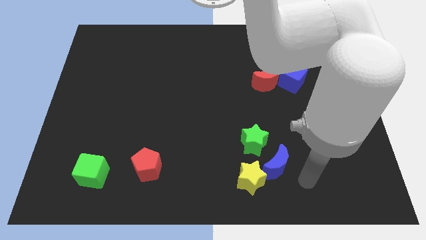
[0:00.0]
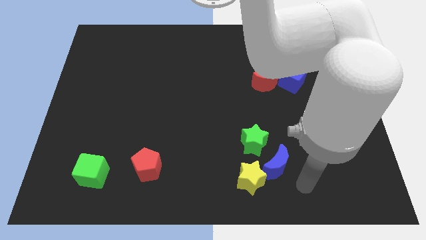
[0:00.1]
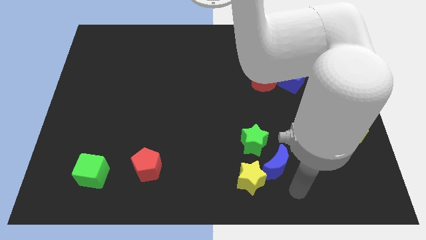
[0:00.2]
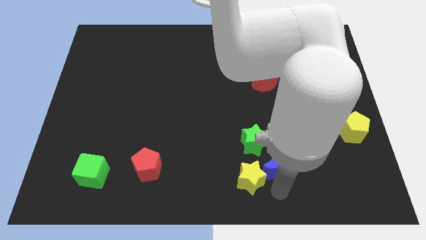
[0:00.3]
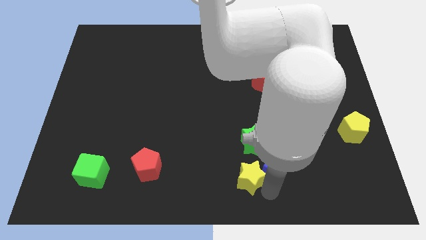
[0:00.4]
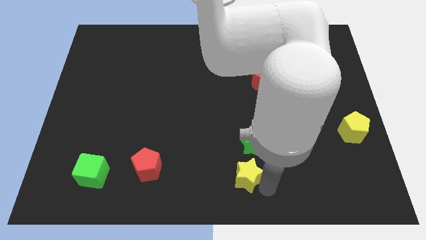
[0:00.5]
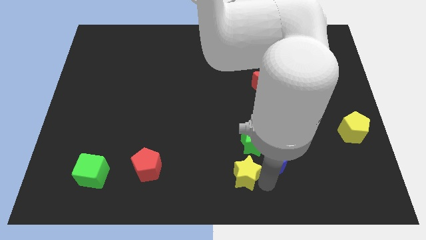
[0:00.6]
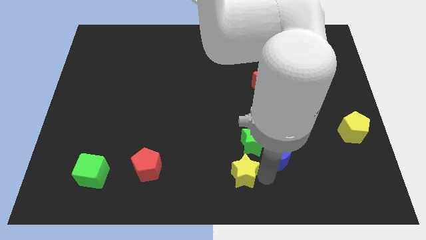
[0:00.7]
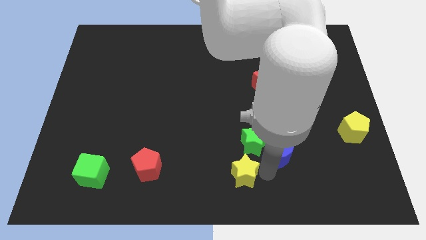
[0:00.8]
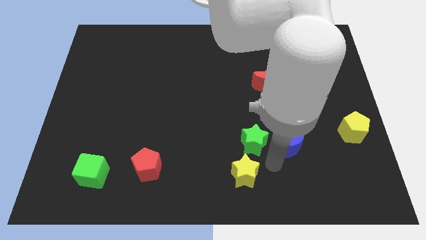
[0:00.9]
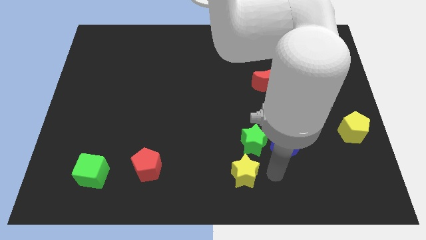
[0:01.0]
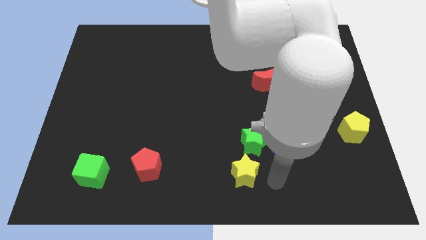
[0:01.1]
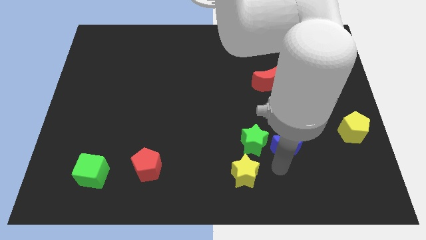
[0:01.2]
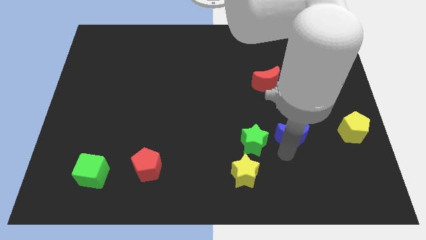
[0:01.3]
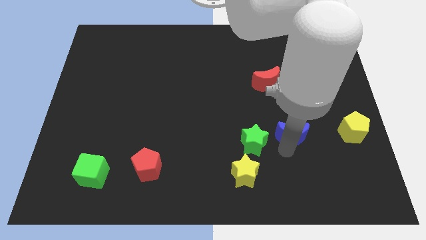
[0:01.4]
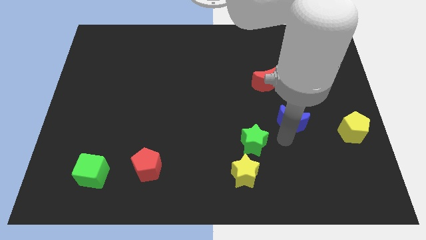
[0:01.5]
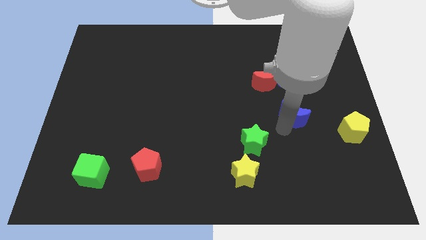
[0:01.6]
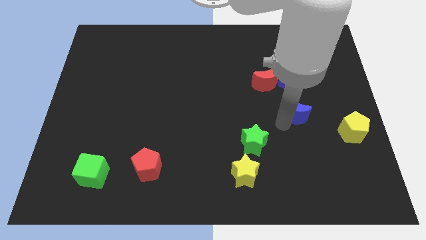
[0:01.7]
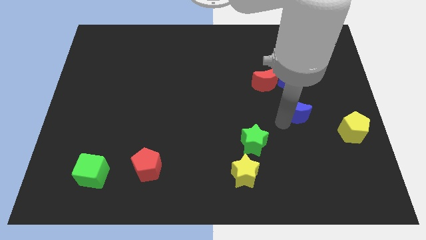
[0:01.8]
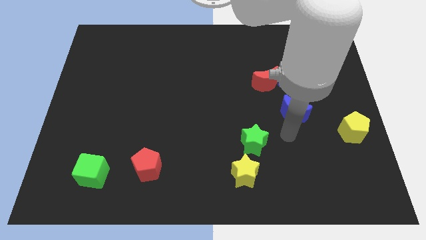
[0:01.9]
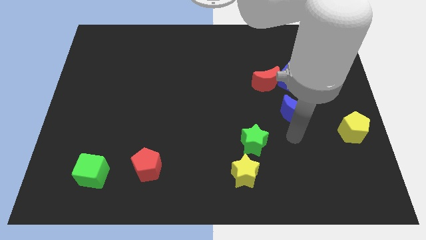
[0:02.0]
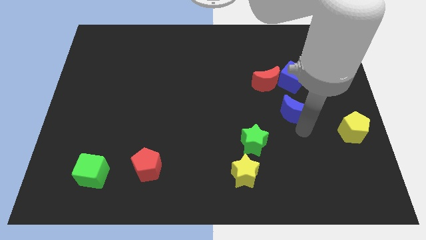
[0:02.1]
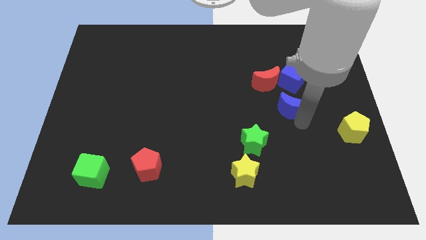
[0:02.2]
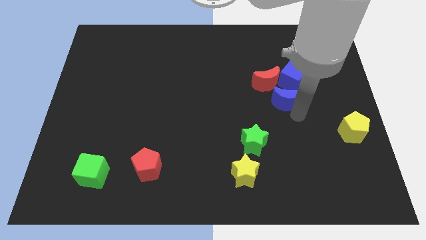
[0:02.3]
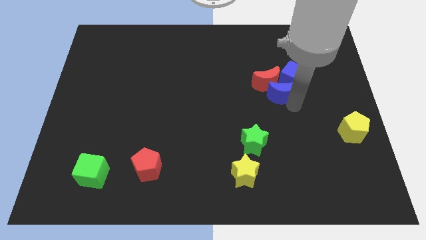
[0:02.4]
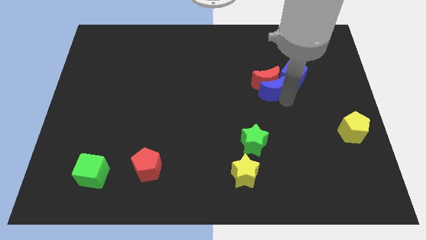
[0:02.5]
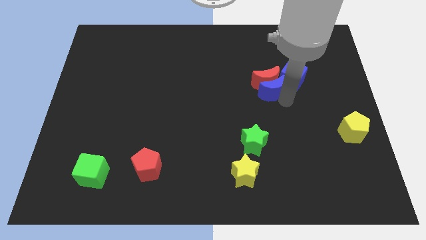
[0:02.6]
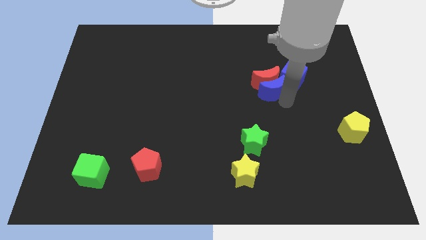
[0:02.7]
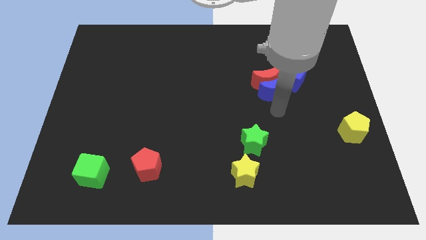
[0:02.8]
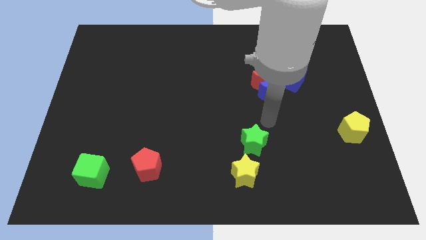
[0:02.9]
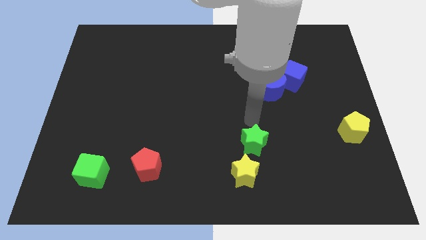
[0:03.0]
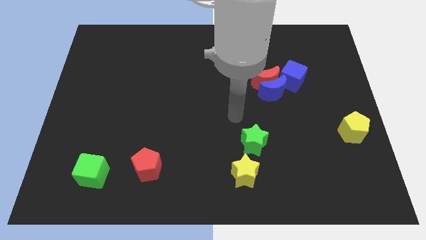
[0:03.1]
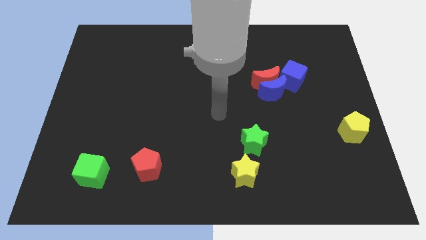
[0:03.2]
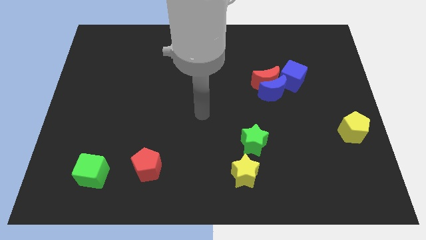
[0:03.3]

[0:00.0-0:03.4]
move the blue crescent into the red crescent towards the top right of the board

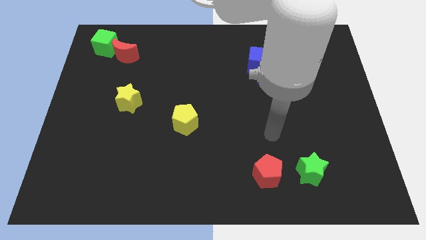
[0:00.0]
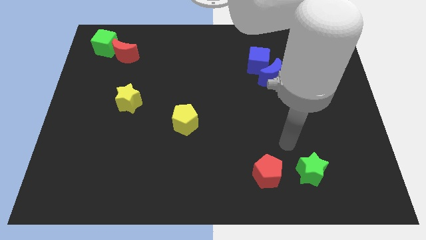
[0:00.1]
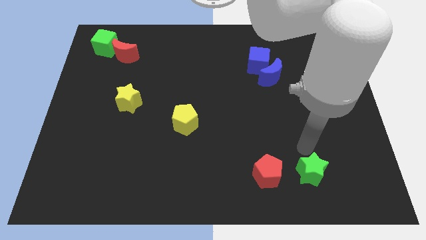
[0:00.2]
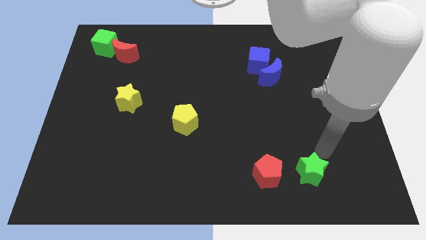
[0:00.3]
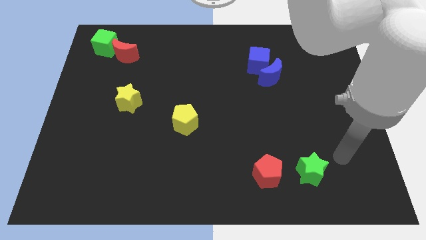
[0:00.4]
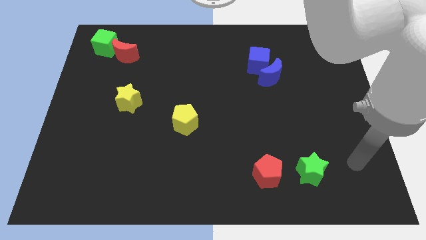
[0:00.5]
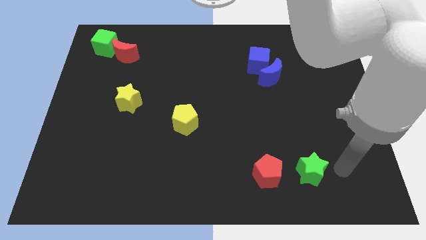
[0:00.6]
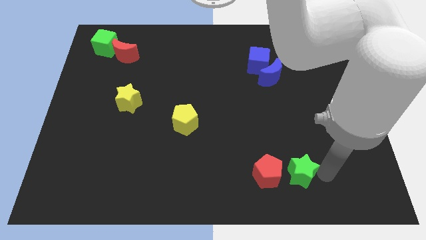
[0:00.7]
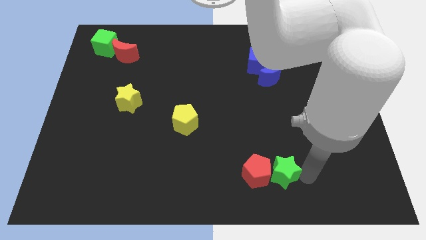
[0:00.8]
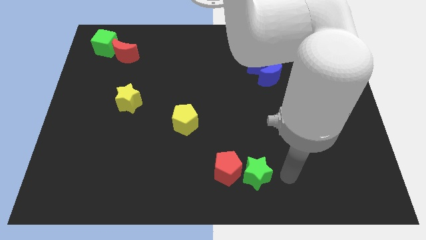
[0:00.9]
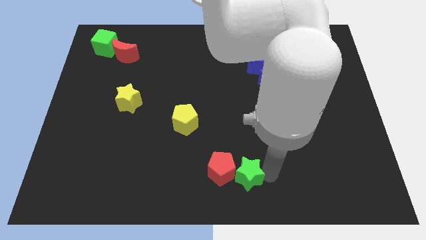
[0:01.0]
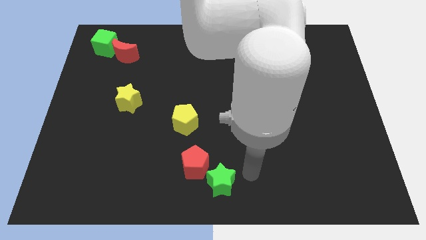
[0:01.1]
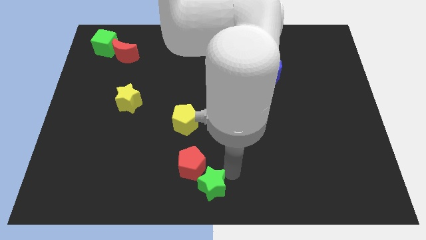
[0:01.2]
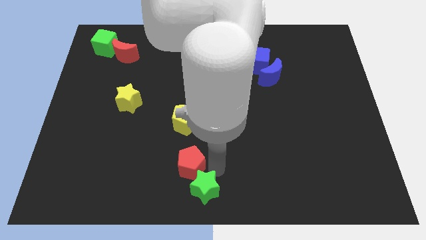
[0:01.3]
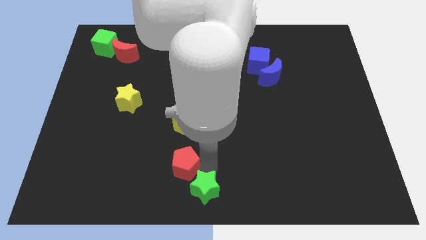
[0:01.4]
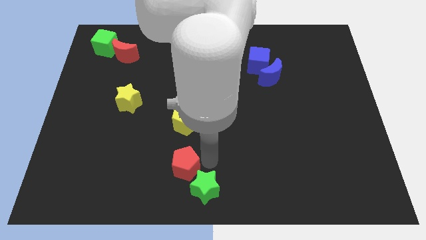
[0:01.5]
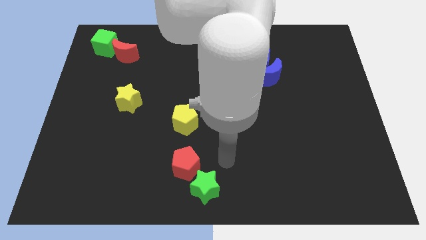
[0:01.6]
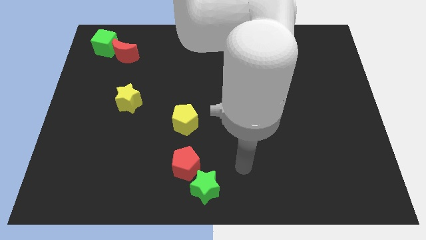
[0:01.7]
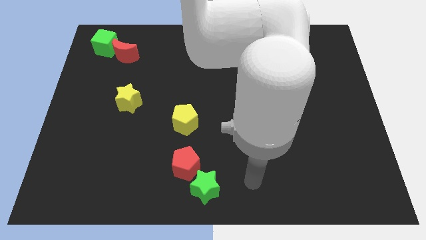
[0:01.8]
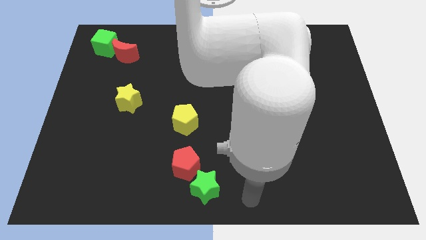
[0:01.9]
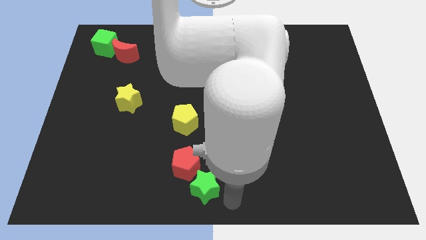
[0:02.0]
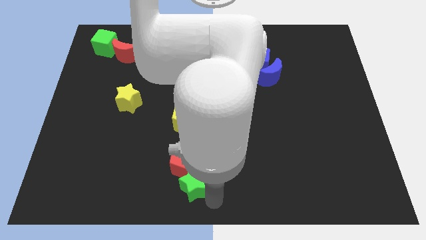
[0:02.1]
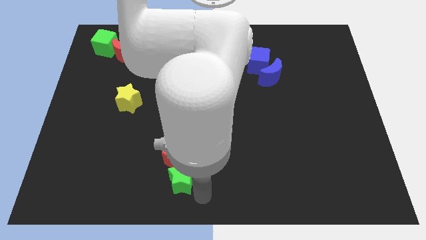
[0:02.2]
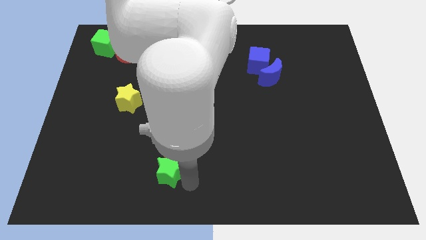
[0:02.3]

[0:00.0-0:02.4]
move the green star to the left bottom

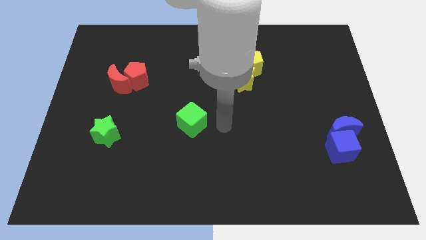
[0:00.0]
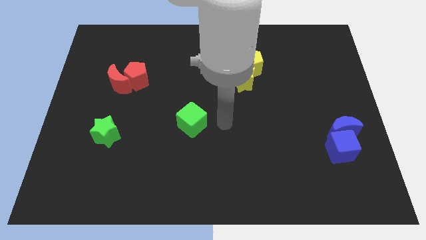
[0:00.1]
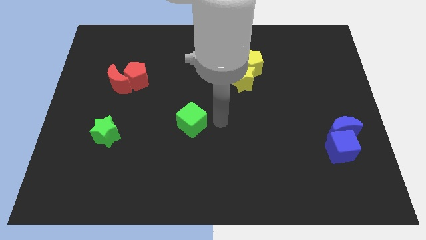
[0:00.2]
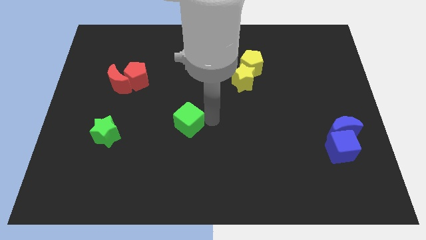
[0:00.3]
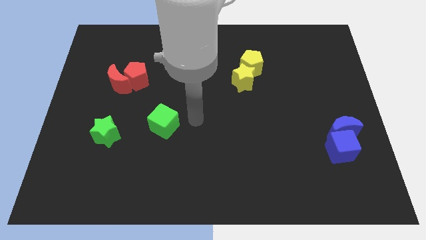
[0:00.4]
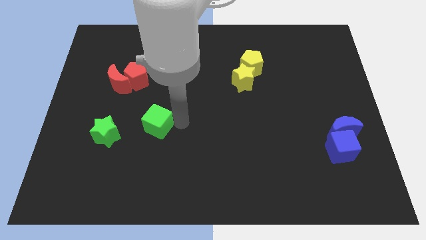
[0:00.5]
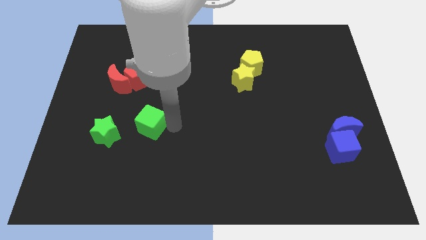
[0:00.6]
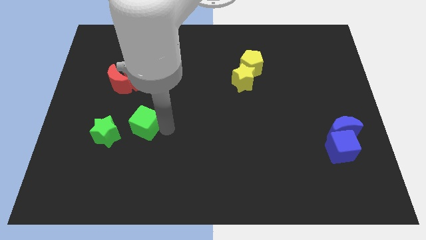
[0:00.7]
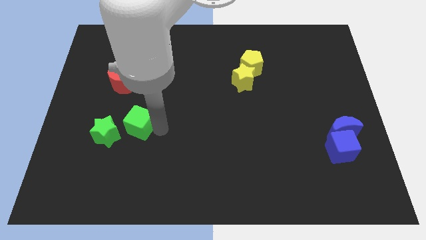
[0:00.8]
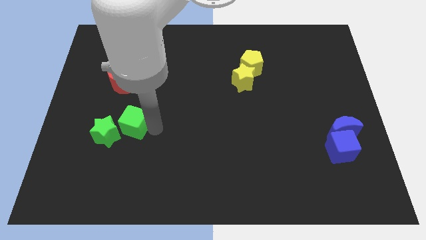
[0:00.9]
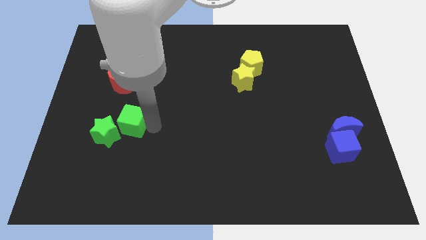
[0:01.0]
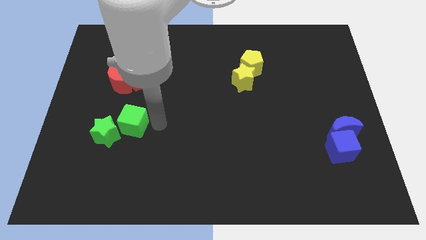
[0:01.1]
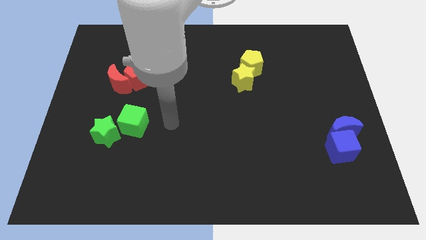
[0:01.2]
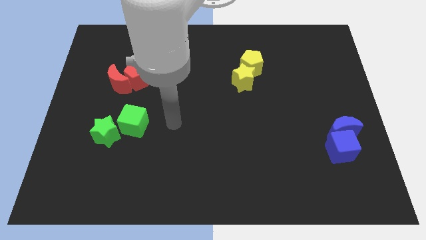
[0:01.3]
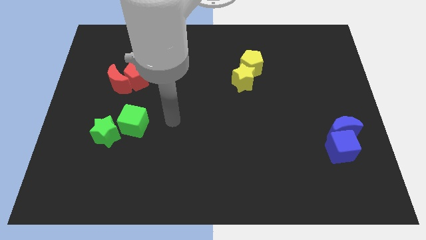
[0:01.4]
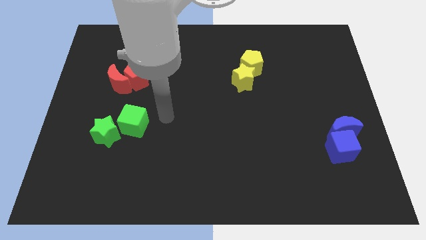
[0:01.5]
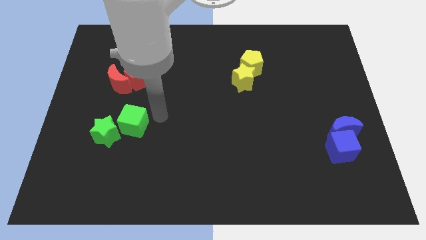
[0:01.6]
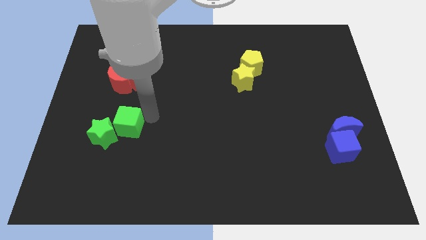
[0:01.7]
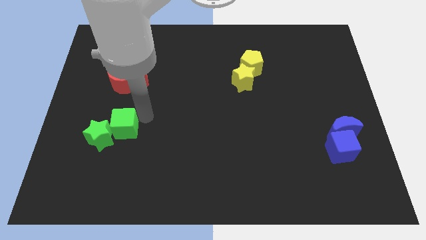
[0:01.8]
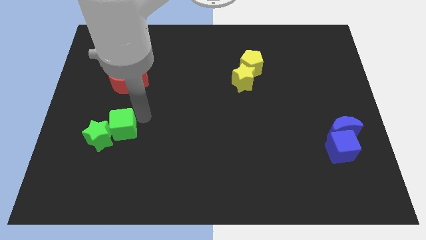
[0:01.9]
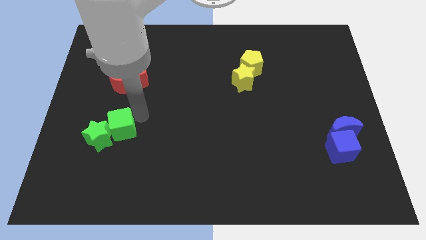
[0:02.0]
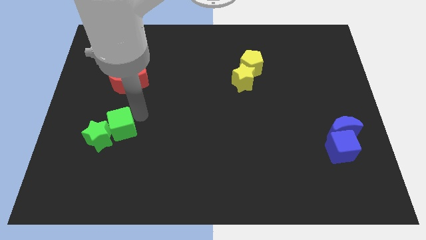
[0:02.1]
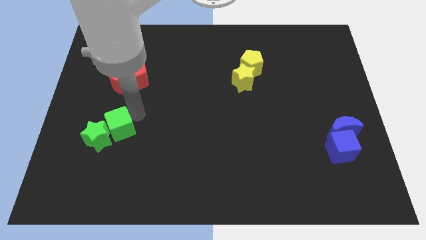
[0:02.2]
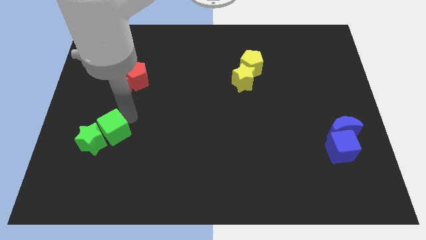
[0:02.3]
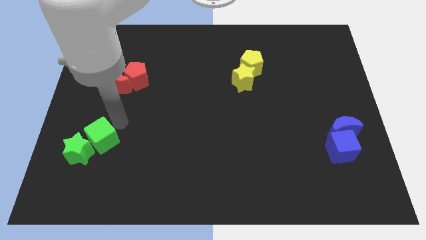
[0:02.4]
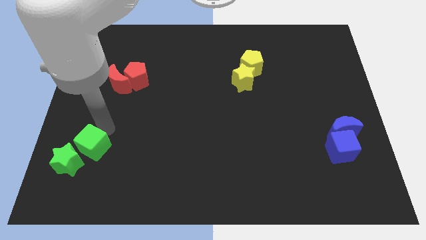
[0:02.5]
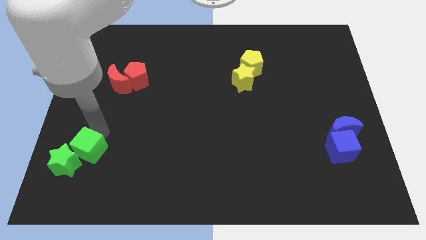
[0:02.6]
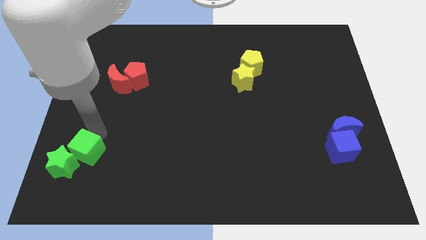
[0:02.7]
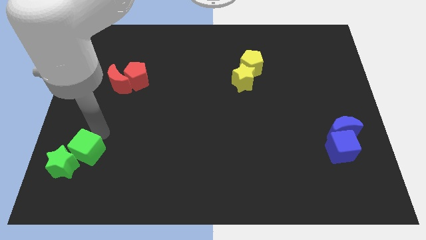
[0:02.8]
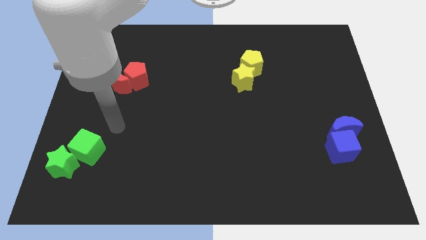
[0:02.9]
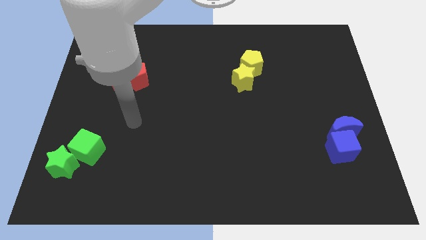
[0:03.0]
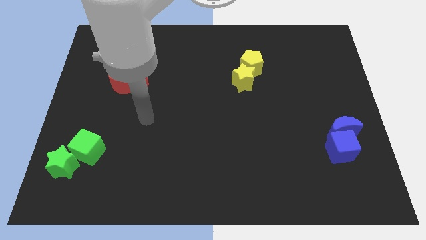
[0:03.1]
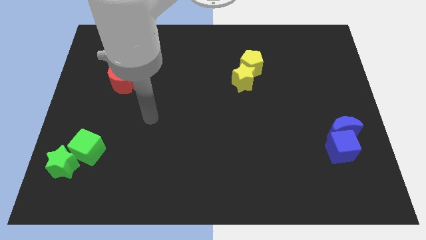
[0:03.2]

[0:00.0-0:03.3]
move the green blocks towards the bottom left corner of the board
